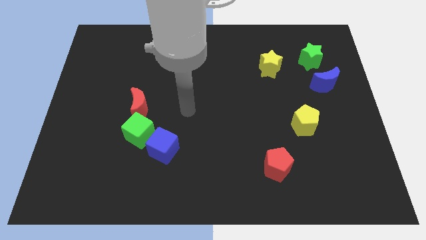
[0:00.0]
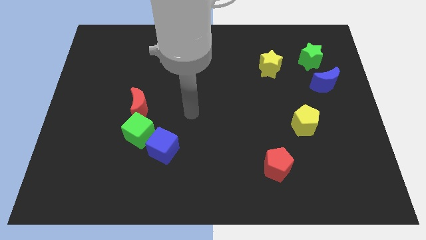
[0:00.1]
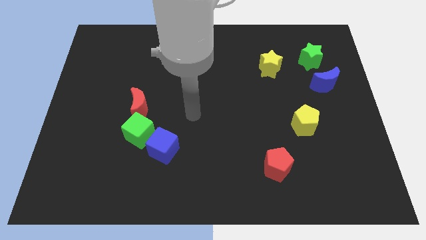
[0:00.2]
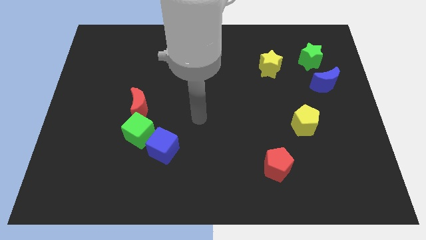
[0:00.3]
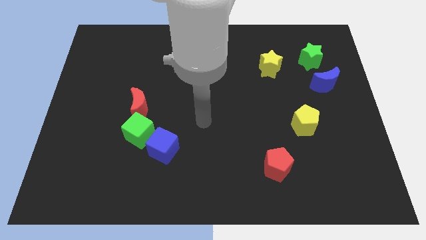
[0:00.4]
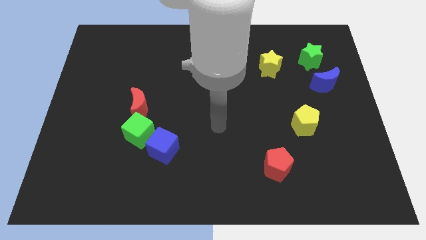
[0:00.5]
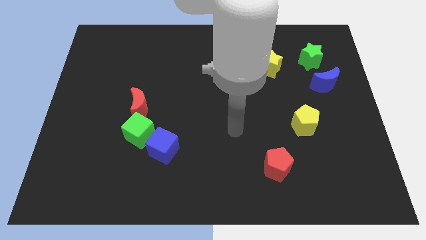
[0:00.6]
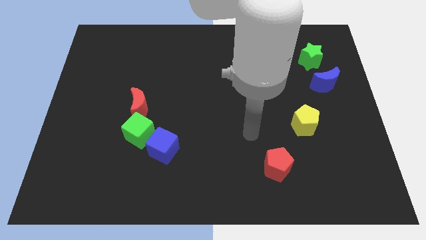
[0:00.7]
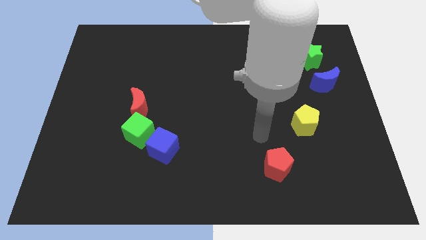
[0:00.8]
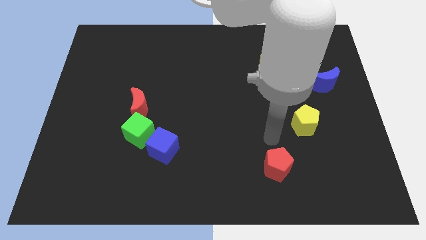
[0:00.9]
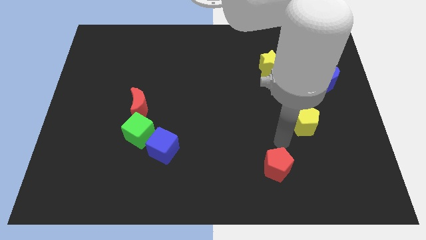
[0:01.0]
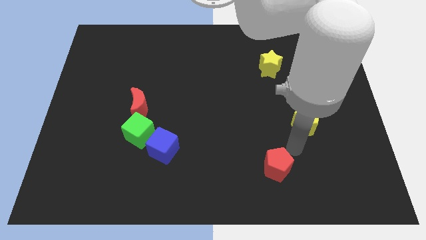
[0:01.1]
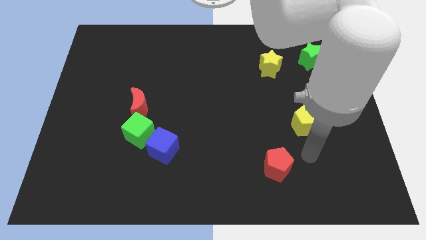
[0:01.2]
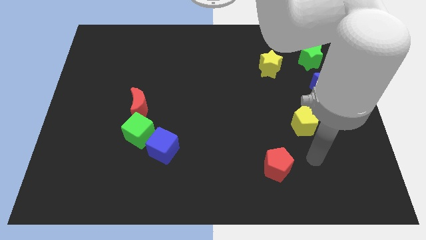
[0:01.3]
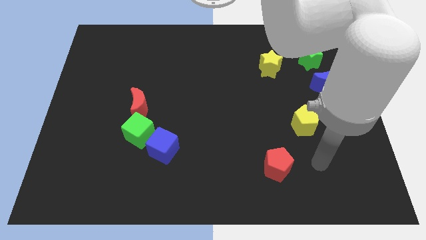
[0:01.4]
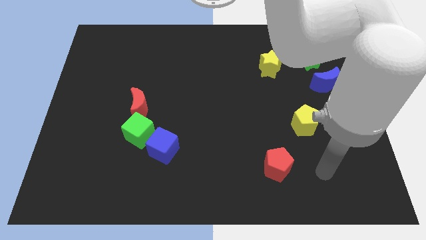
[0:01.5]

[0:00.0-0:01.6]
move your hand to the right of the red pentagon

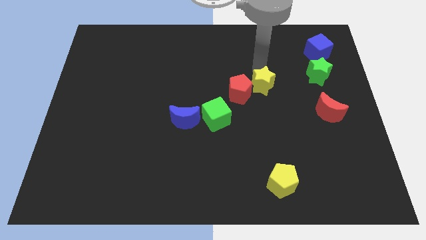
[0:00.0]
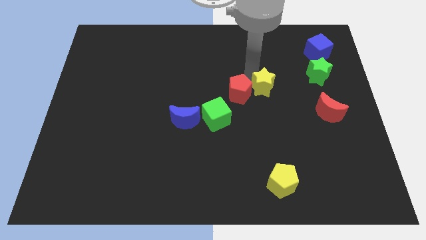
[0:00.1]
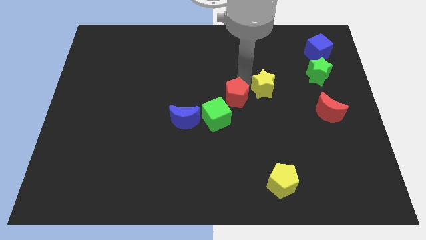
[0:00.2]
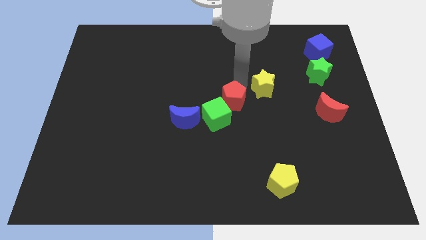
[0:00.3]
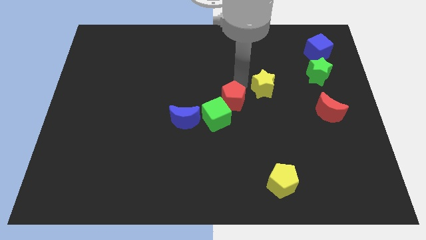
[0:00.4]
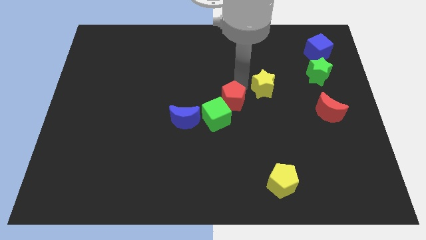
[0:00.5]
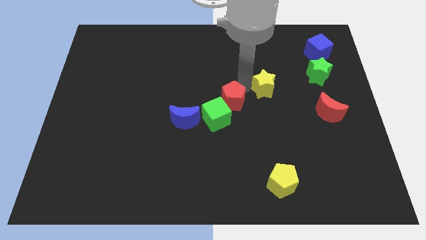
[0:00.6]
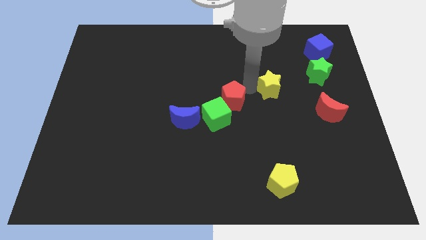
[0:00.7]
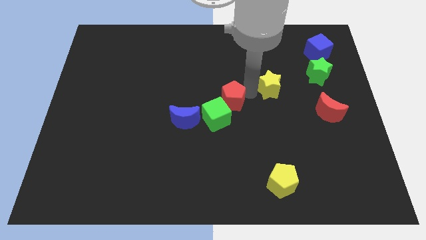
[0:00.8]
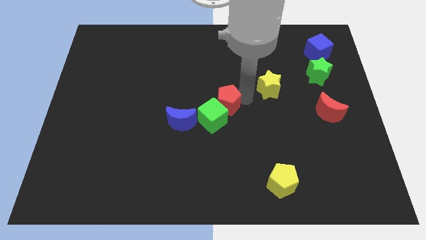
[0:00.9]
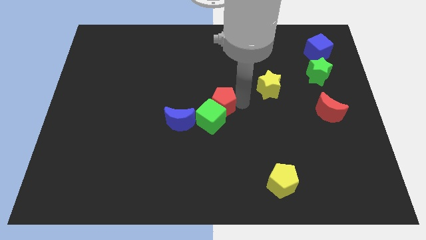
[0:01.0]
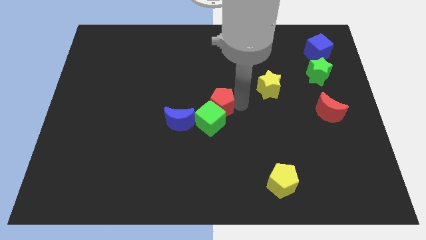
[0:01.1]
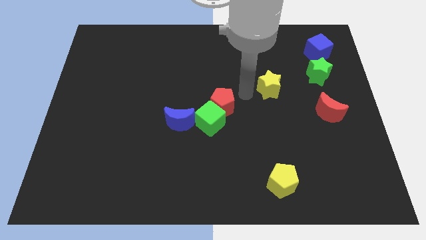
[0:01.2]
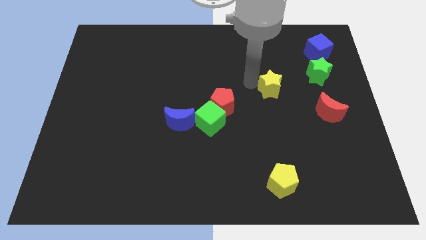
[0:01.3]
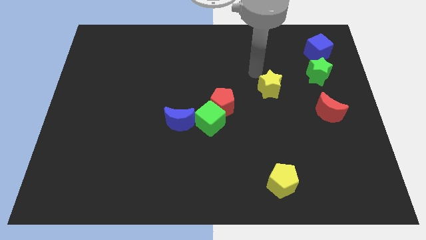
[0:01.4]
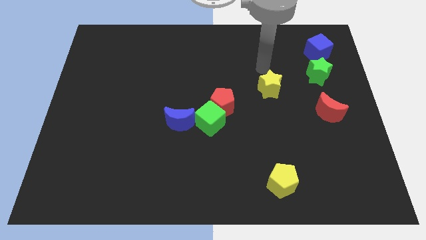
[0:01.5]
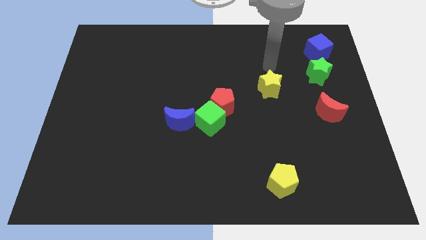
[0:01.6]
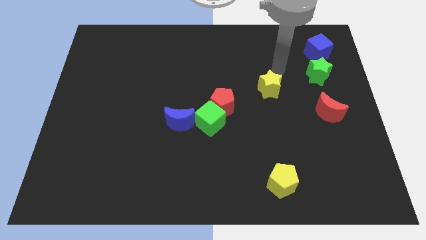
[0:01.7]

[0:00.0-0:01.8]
separate red pentagon from yellow star

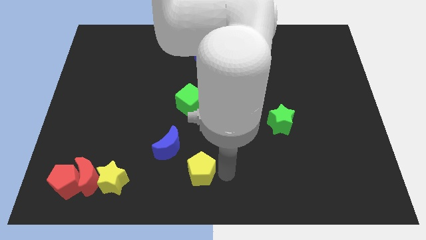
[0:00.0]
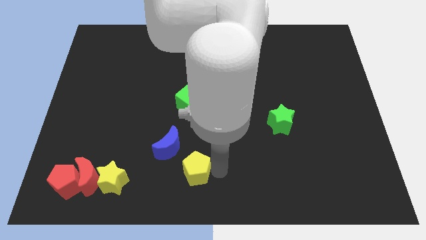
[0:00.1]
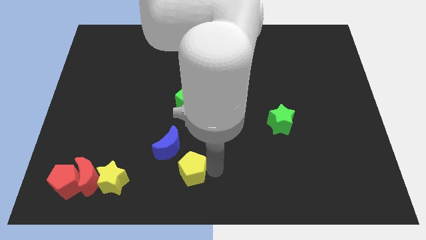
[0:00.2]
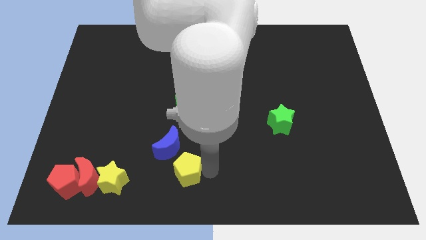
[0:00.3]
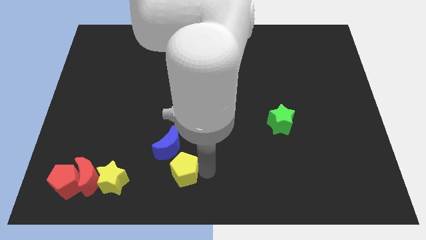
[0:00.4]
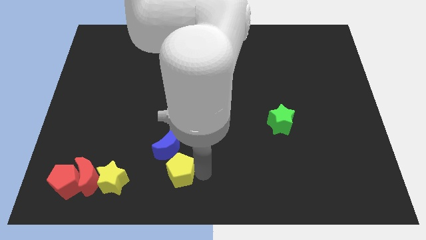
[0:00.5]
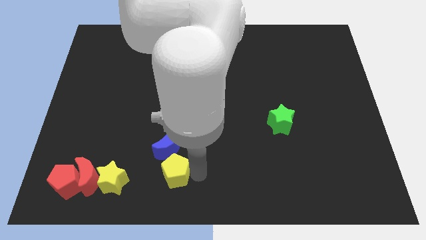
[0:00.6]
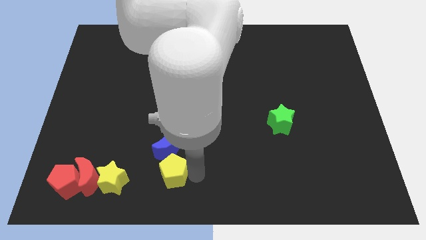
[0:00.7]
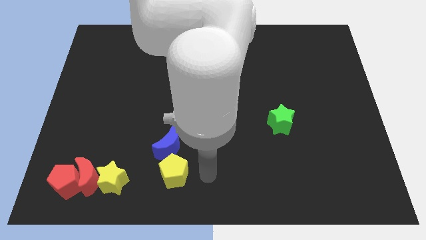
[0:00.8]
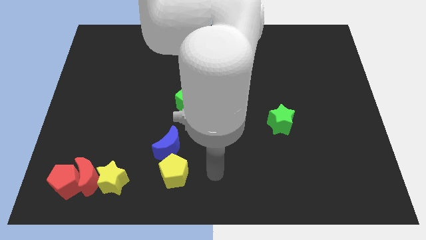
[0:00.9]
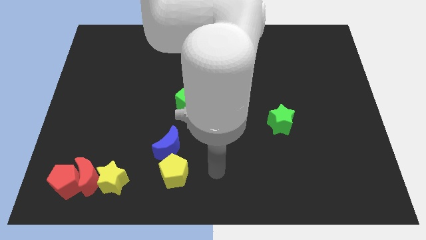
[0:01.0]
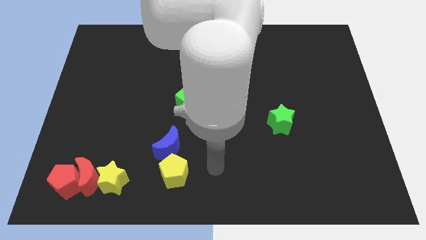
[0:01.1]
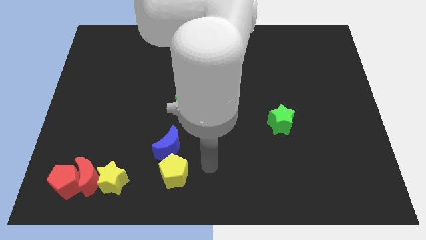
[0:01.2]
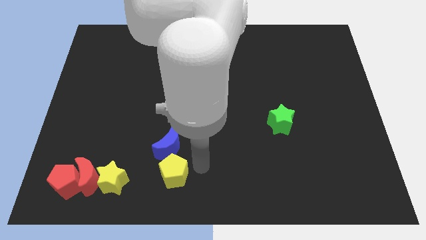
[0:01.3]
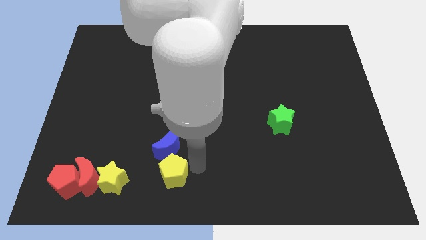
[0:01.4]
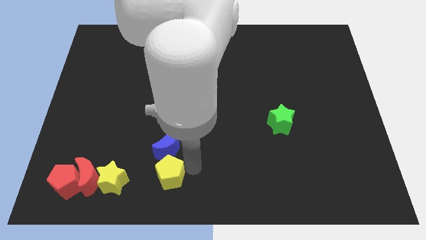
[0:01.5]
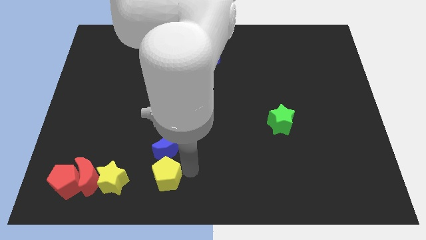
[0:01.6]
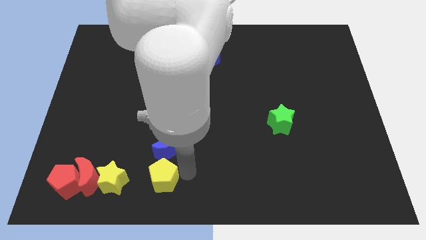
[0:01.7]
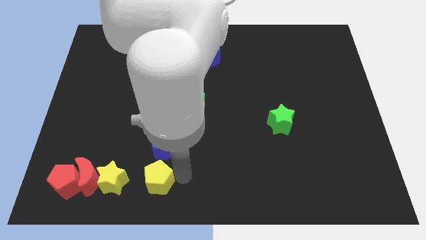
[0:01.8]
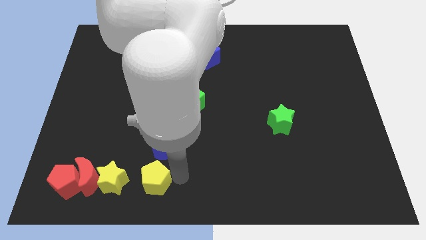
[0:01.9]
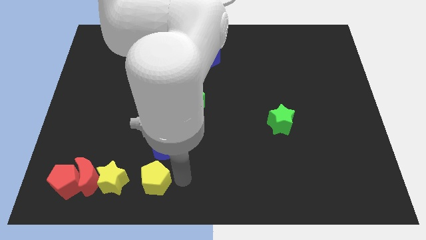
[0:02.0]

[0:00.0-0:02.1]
move the yellow pentagon to the bottom of the blue crescent

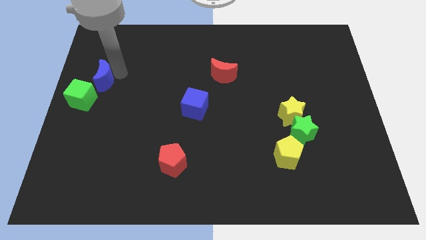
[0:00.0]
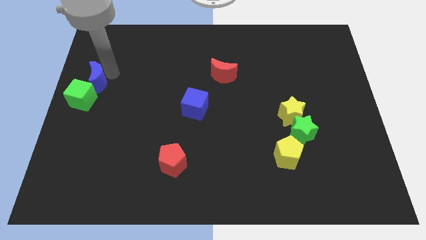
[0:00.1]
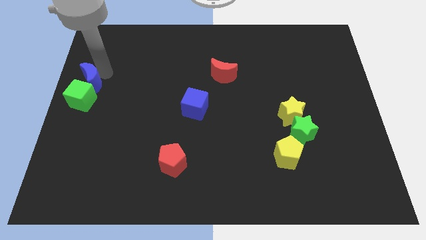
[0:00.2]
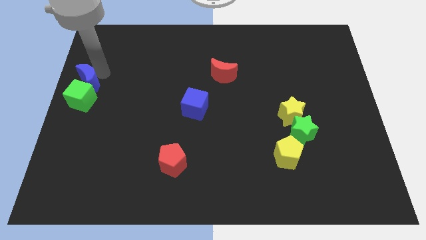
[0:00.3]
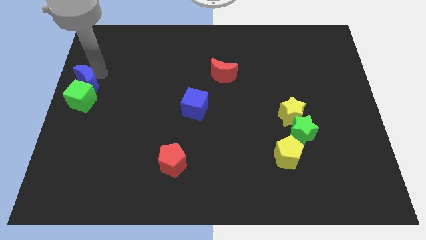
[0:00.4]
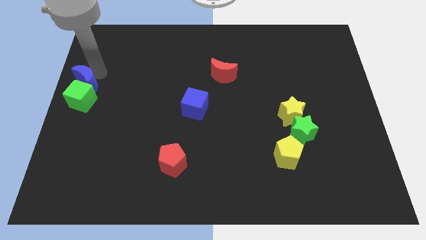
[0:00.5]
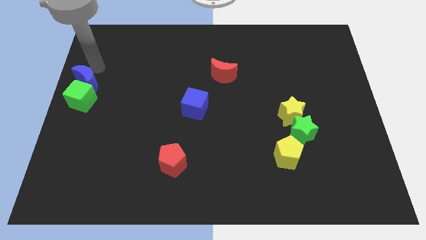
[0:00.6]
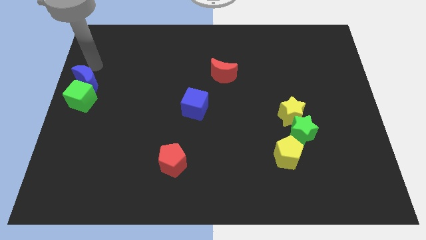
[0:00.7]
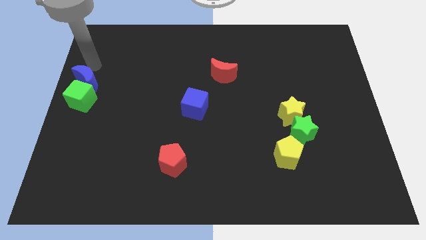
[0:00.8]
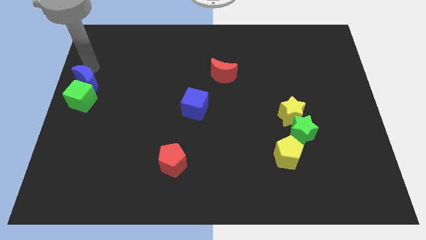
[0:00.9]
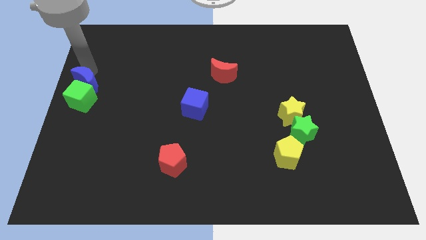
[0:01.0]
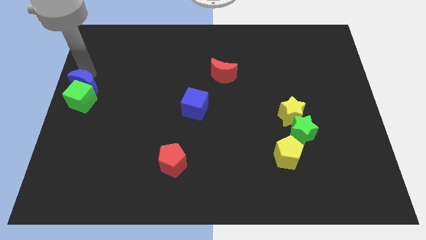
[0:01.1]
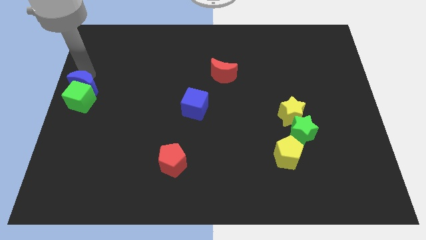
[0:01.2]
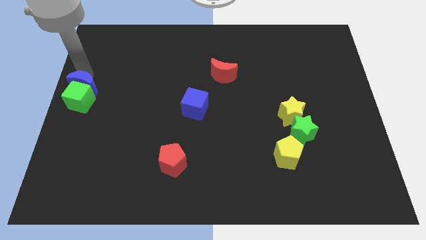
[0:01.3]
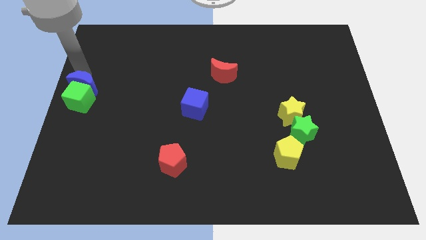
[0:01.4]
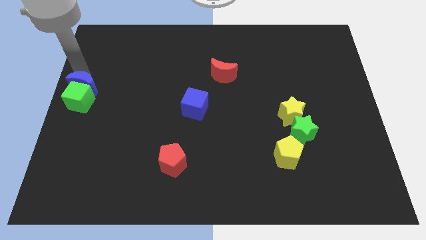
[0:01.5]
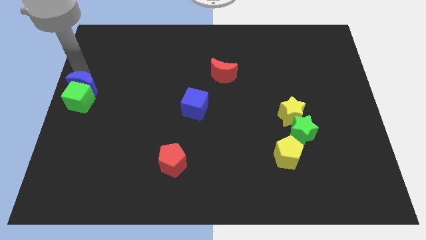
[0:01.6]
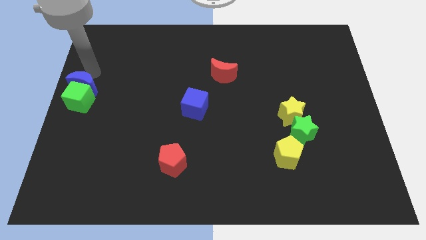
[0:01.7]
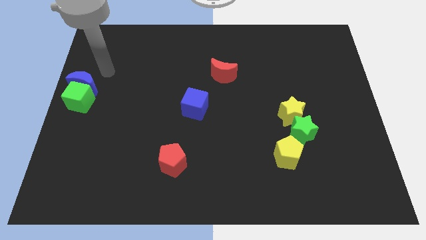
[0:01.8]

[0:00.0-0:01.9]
push the blue moon into the green cube

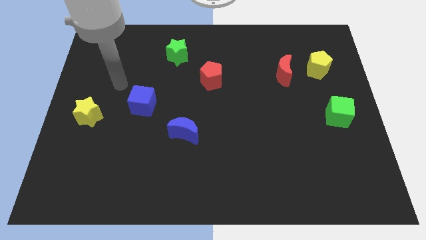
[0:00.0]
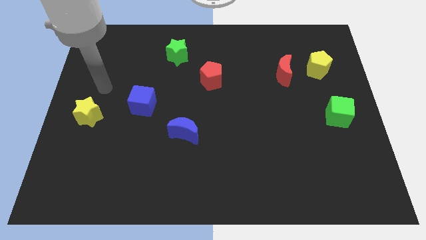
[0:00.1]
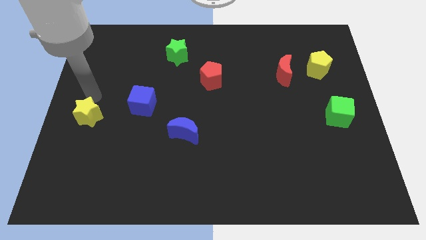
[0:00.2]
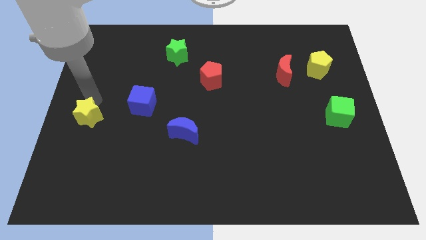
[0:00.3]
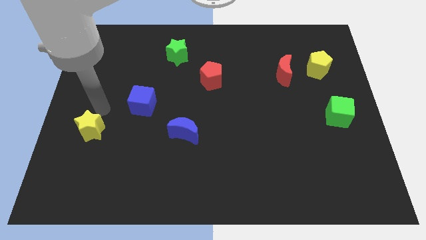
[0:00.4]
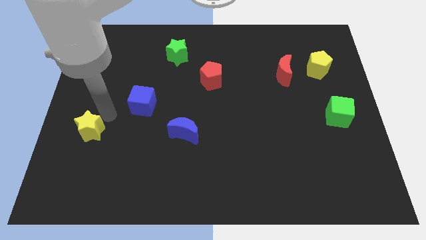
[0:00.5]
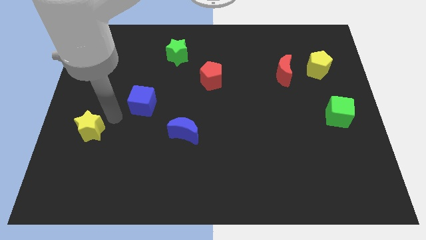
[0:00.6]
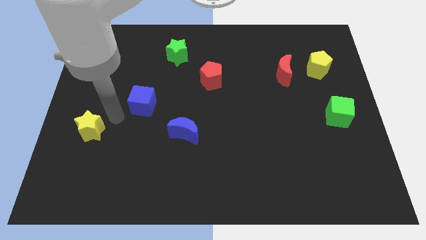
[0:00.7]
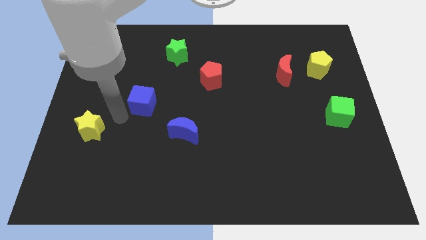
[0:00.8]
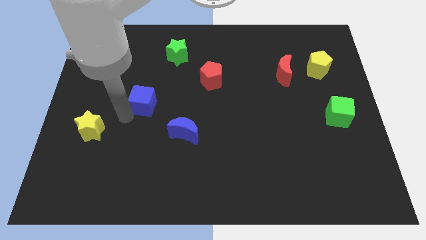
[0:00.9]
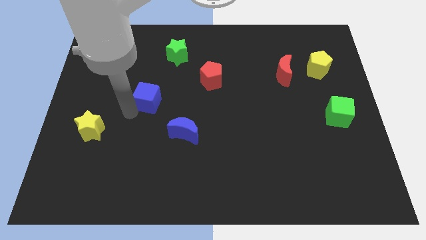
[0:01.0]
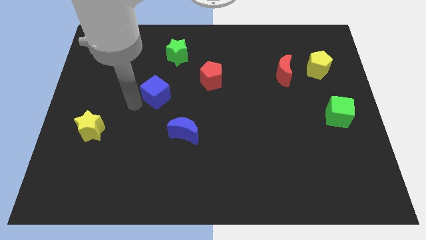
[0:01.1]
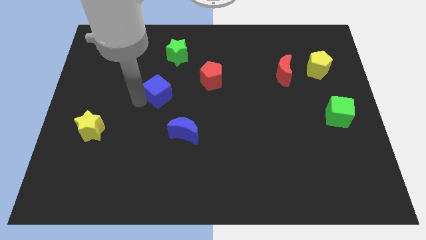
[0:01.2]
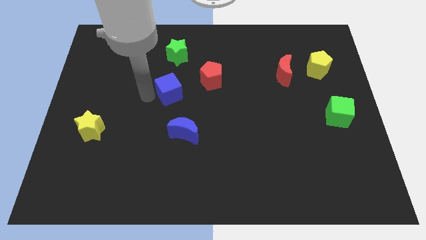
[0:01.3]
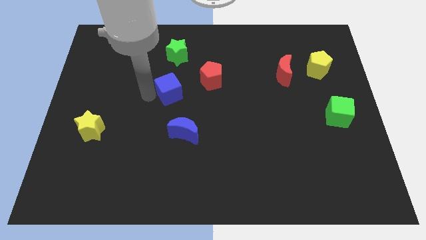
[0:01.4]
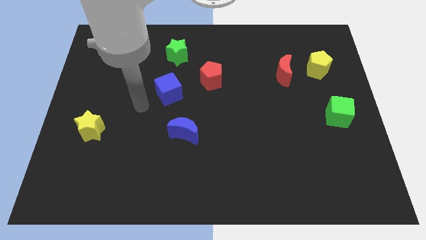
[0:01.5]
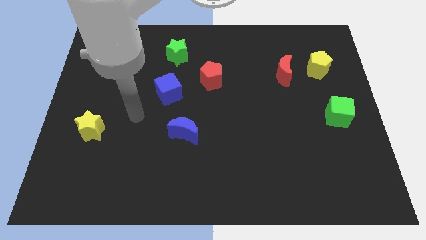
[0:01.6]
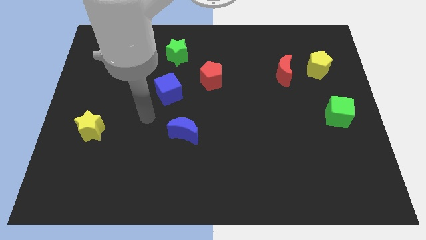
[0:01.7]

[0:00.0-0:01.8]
drag the blue cube towards the red pentagon
